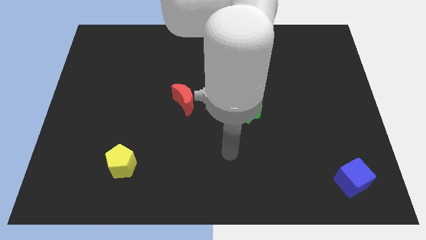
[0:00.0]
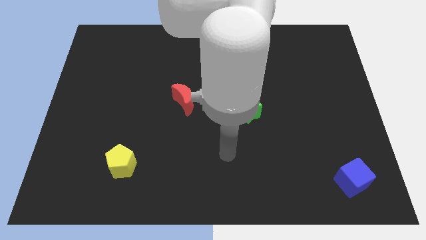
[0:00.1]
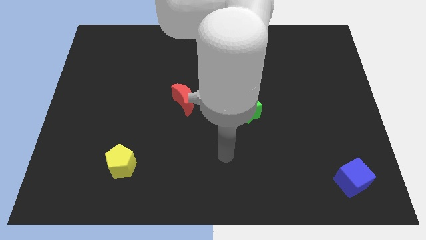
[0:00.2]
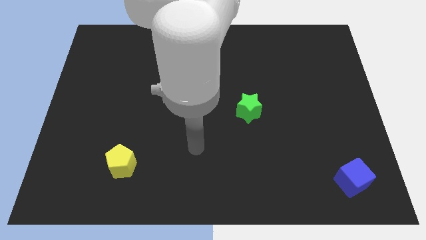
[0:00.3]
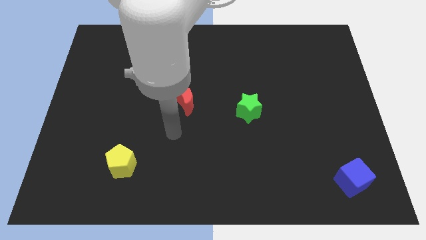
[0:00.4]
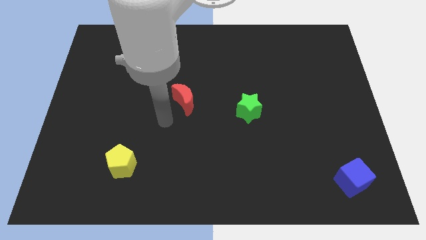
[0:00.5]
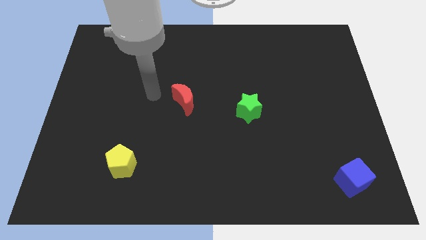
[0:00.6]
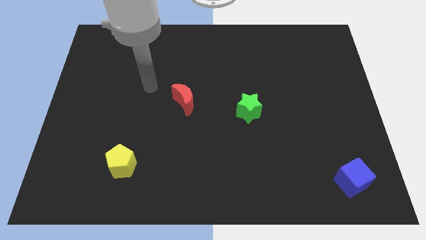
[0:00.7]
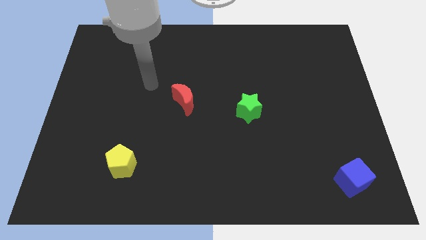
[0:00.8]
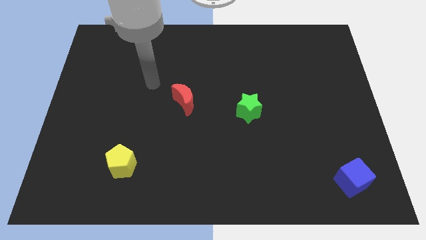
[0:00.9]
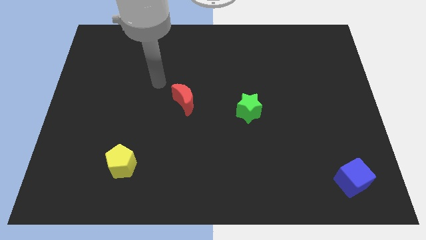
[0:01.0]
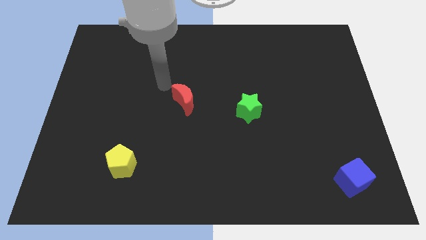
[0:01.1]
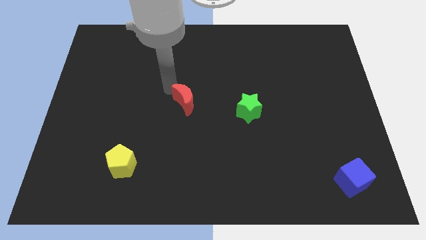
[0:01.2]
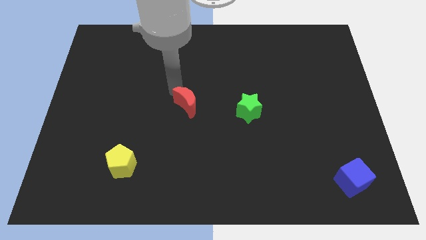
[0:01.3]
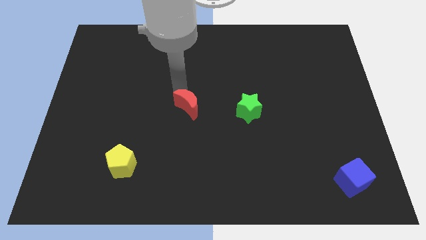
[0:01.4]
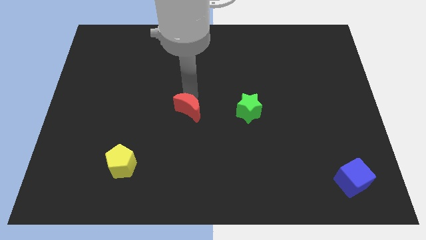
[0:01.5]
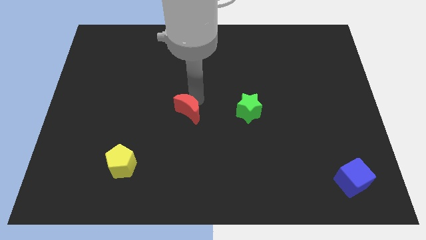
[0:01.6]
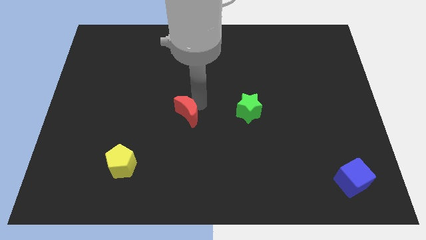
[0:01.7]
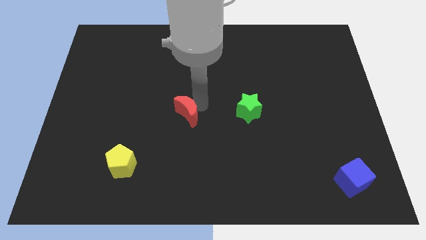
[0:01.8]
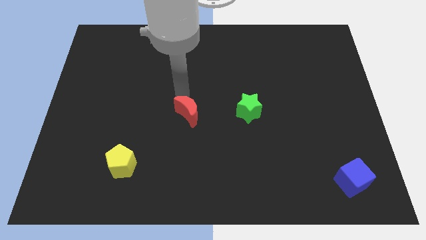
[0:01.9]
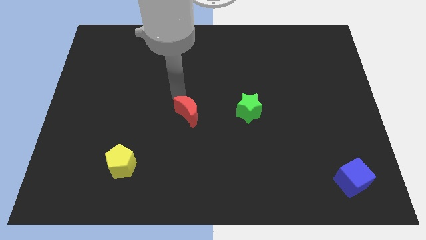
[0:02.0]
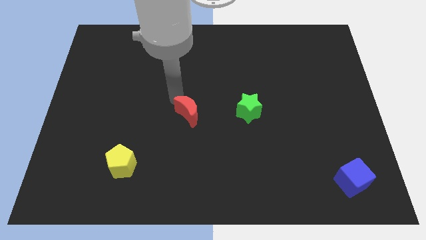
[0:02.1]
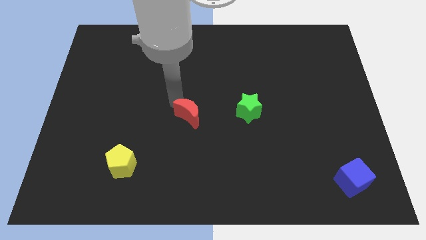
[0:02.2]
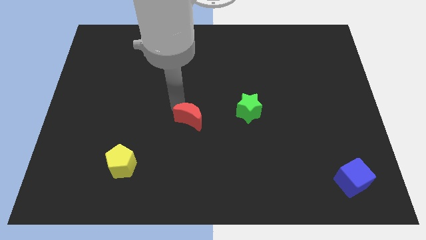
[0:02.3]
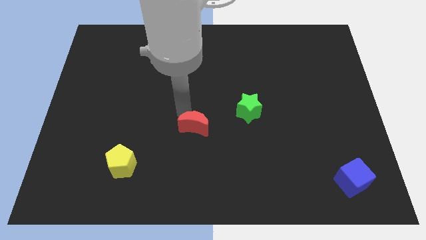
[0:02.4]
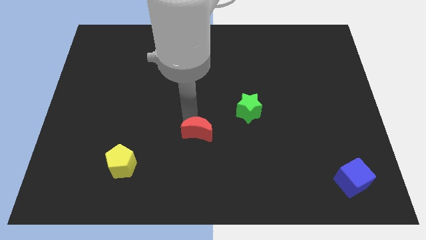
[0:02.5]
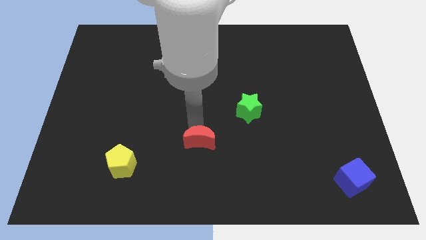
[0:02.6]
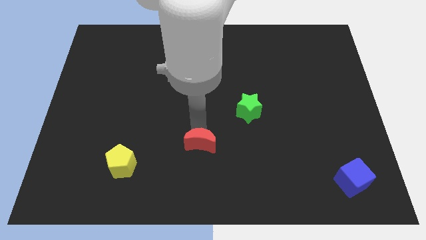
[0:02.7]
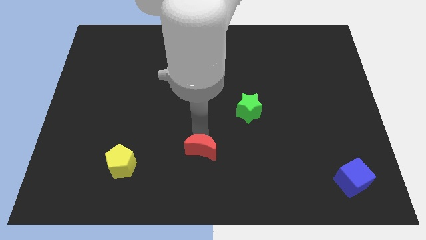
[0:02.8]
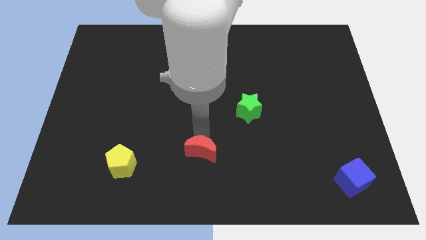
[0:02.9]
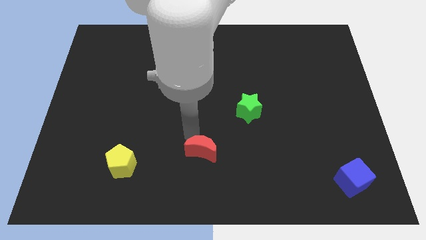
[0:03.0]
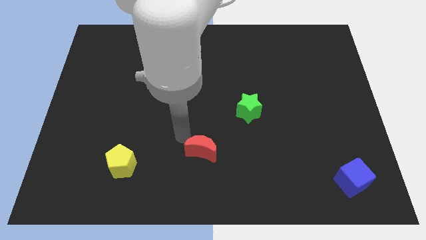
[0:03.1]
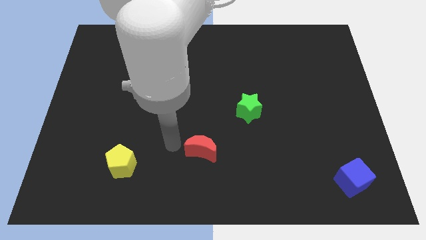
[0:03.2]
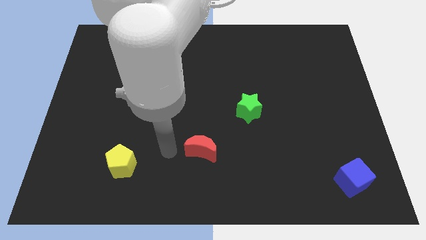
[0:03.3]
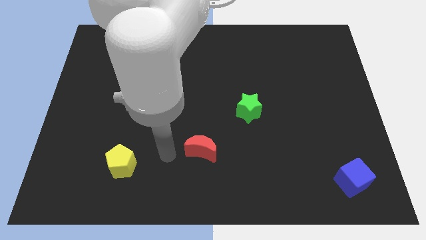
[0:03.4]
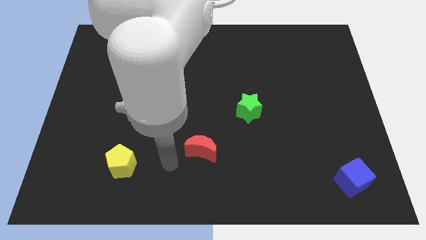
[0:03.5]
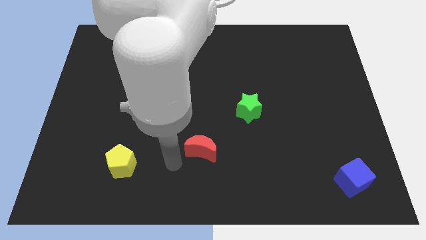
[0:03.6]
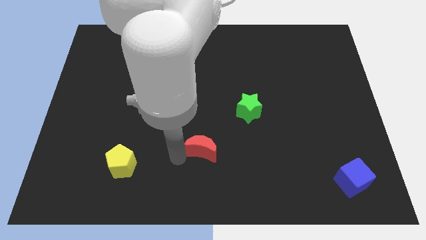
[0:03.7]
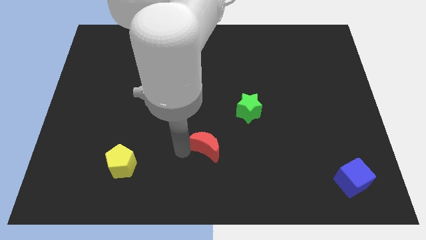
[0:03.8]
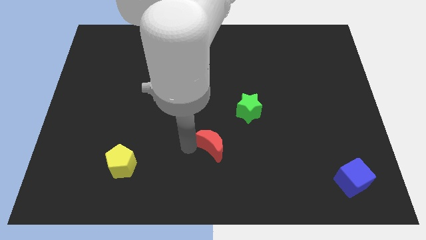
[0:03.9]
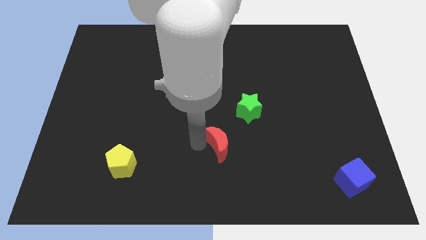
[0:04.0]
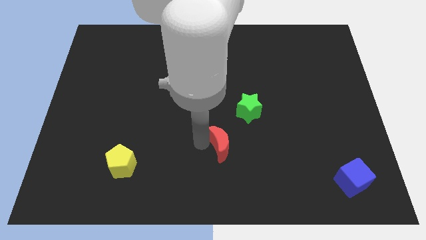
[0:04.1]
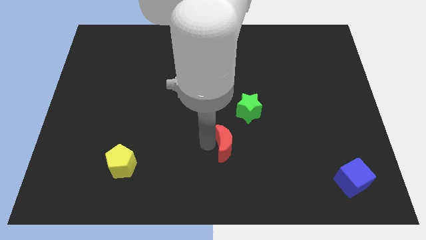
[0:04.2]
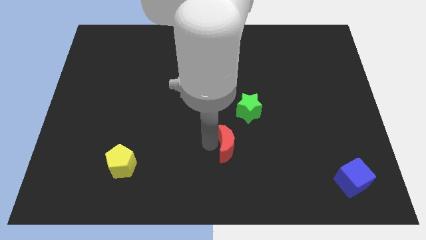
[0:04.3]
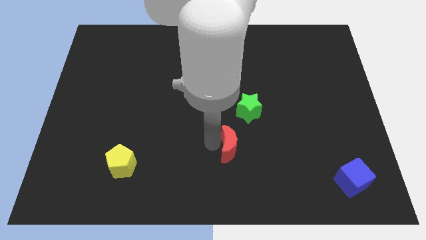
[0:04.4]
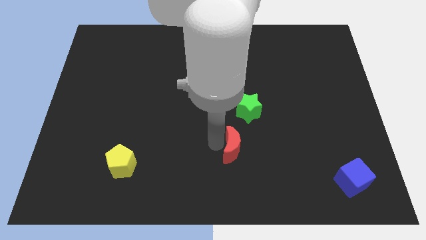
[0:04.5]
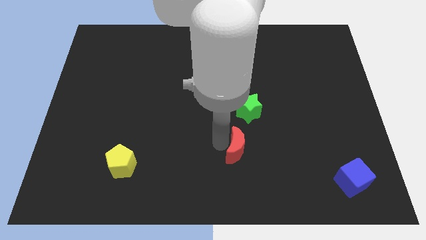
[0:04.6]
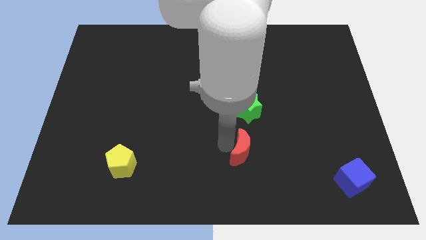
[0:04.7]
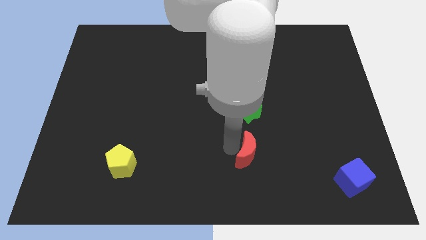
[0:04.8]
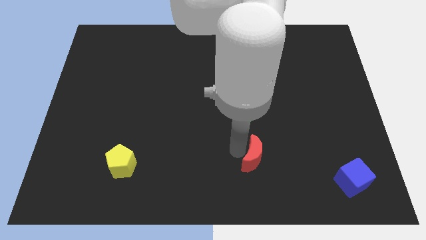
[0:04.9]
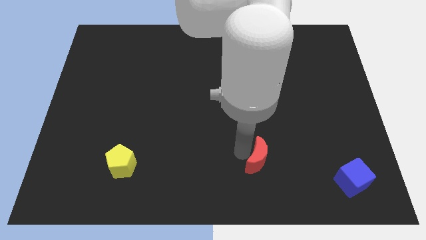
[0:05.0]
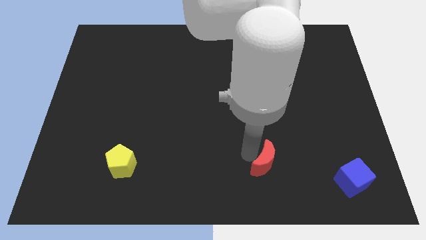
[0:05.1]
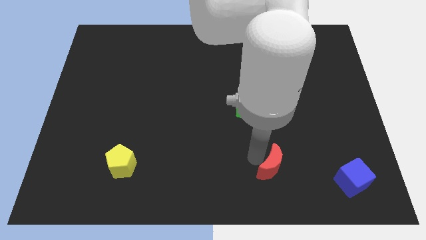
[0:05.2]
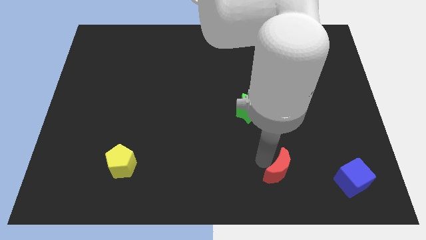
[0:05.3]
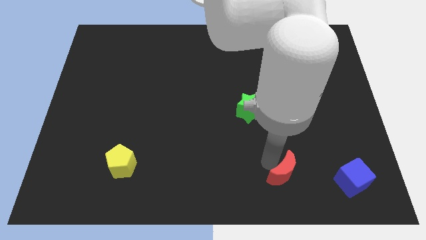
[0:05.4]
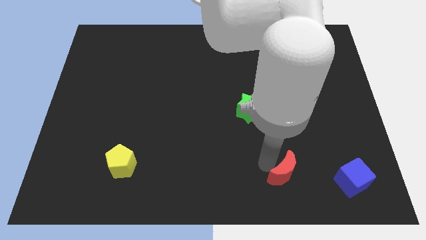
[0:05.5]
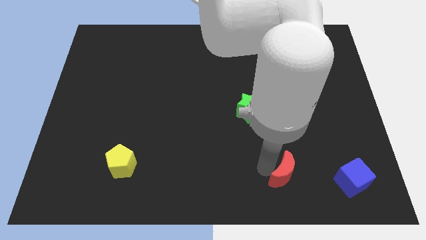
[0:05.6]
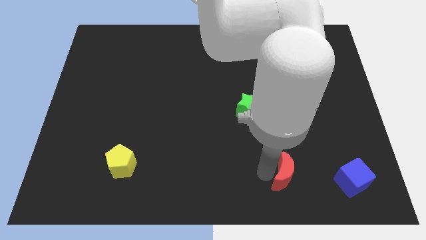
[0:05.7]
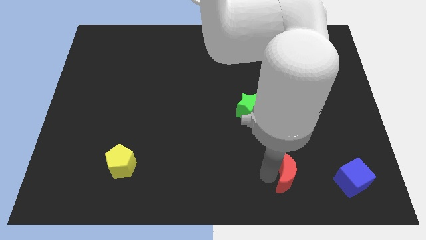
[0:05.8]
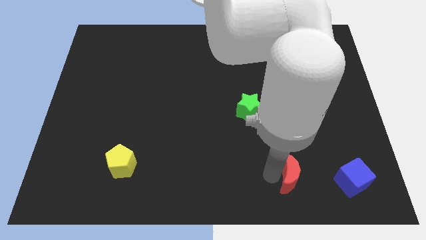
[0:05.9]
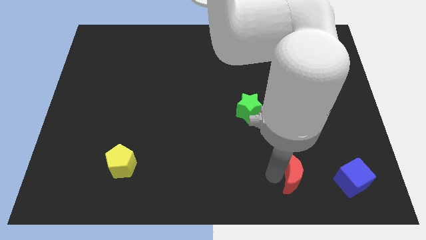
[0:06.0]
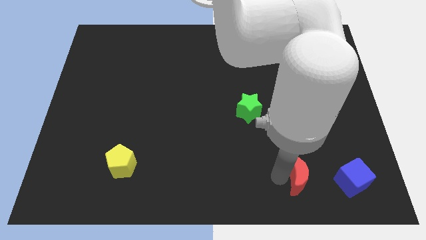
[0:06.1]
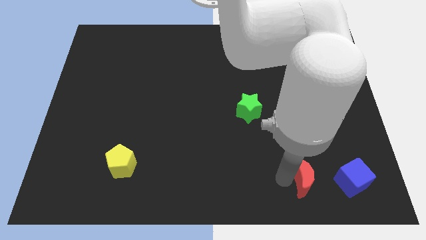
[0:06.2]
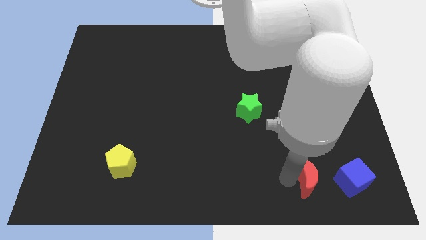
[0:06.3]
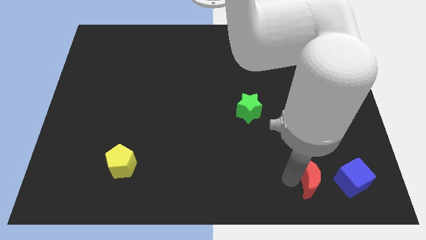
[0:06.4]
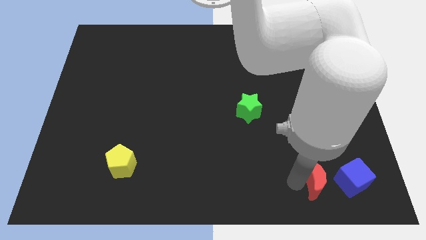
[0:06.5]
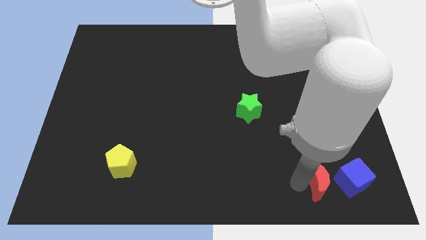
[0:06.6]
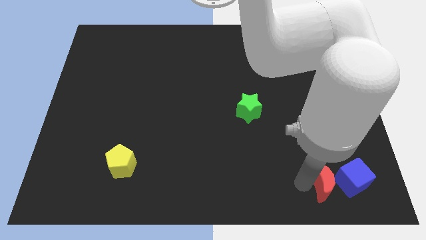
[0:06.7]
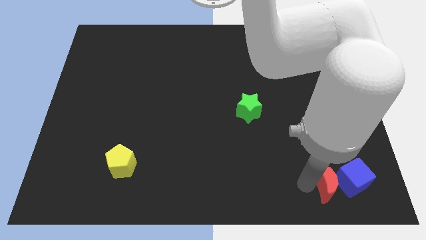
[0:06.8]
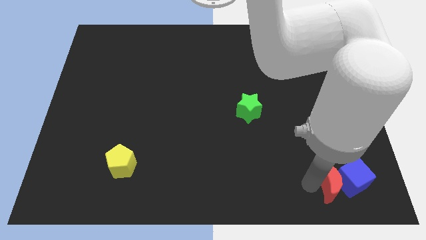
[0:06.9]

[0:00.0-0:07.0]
push the red block to the cube

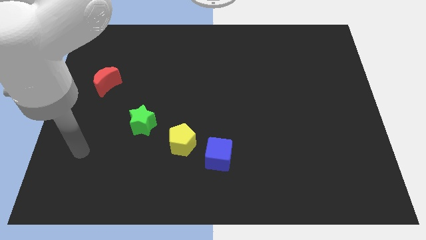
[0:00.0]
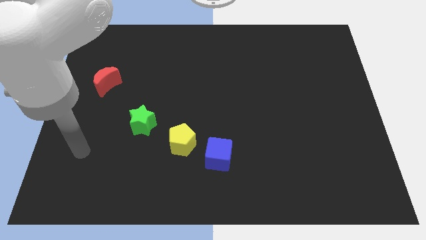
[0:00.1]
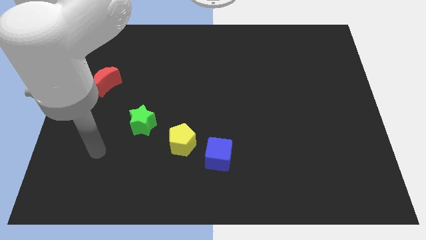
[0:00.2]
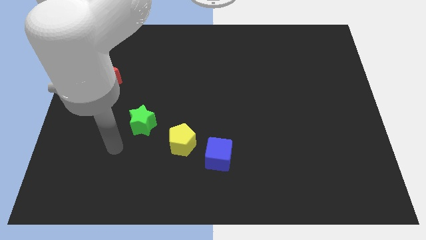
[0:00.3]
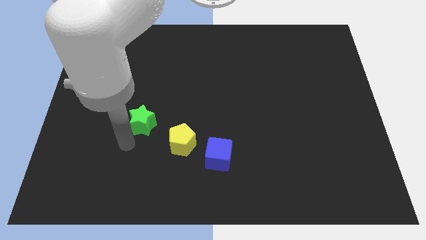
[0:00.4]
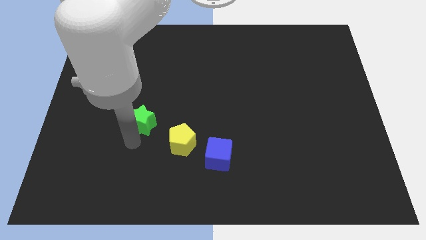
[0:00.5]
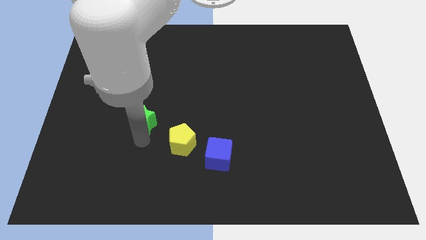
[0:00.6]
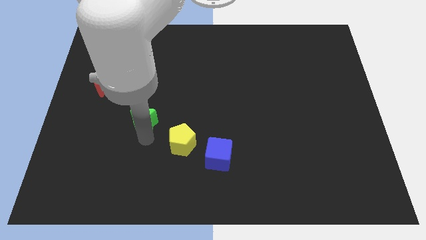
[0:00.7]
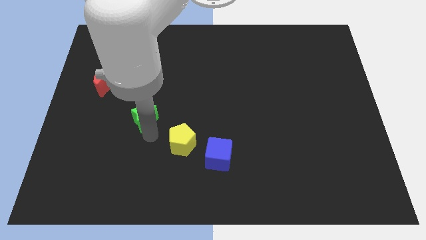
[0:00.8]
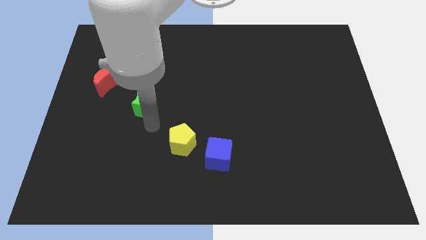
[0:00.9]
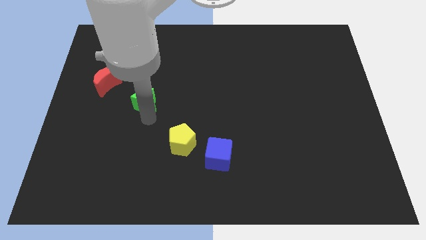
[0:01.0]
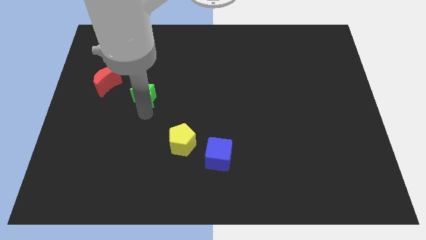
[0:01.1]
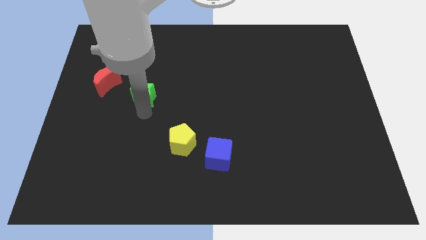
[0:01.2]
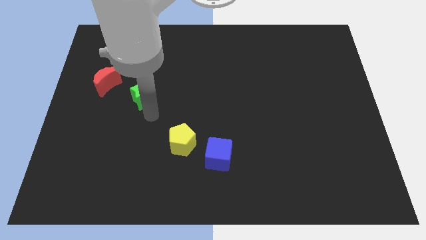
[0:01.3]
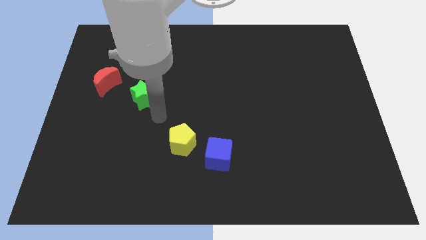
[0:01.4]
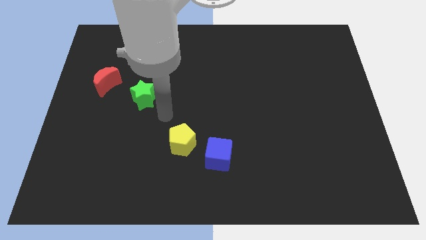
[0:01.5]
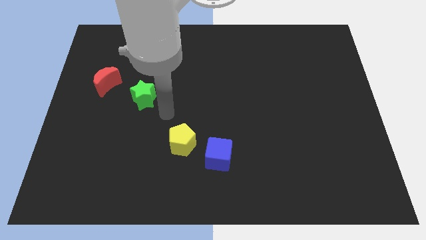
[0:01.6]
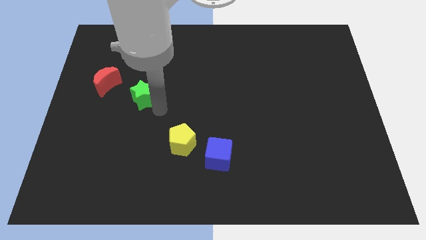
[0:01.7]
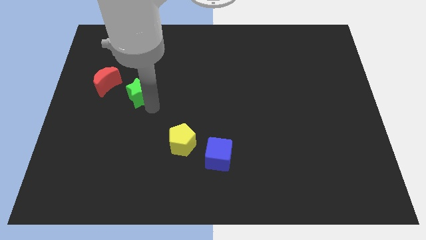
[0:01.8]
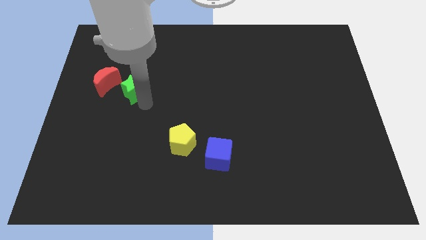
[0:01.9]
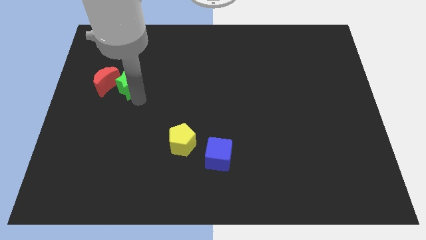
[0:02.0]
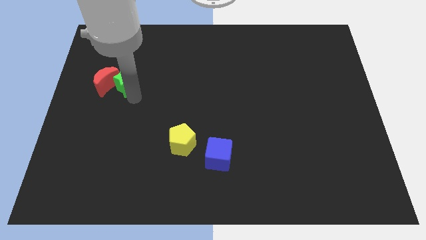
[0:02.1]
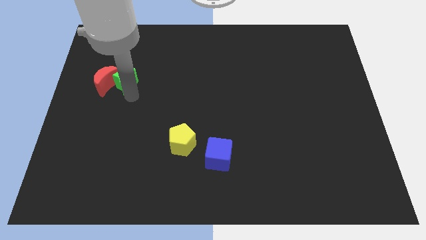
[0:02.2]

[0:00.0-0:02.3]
put the green block next to the red moon
